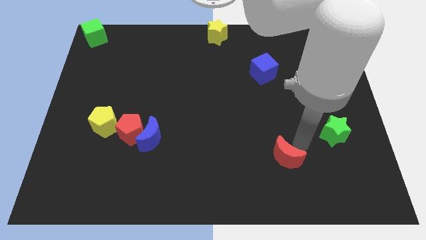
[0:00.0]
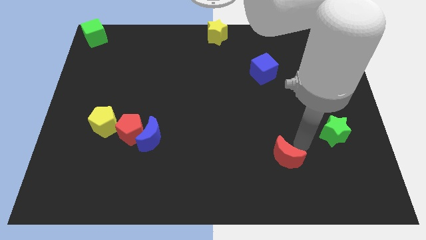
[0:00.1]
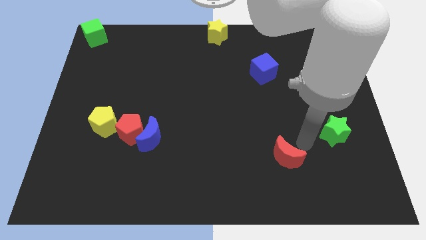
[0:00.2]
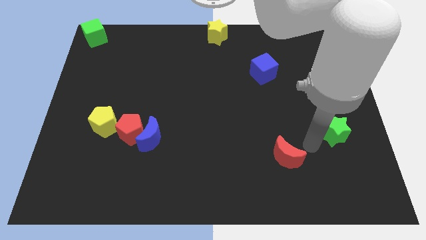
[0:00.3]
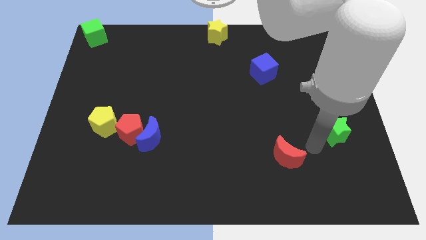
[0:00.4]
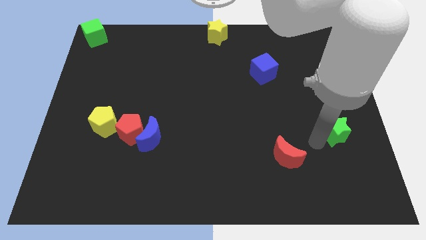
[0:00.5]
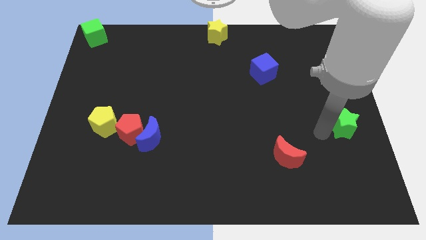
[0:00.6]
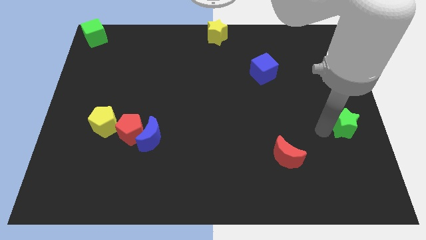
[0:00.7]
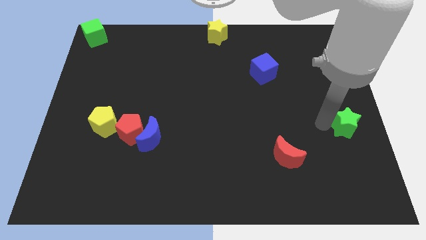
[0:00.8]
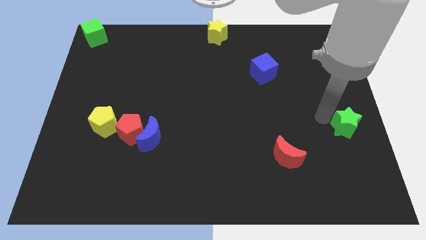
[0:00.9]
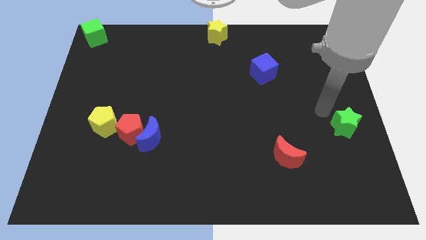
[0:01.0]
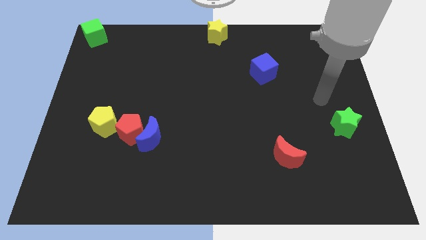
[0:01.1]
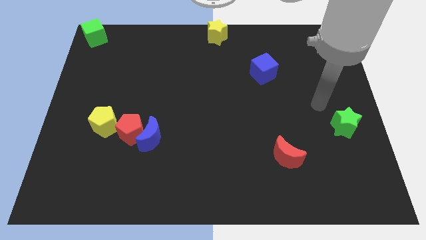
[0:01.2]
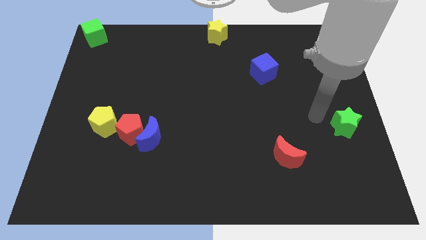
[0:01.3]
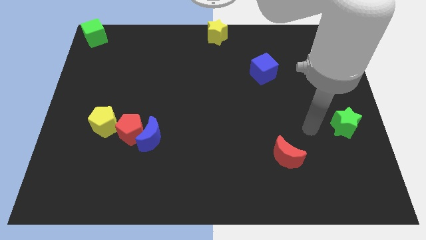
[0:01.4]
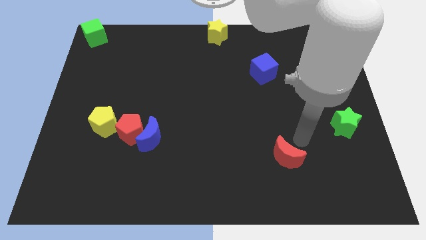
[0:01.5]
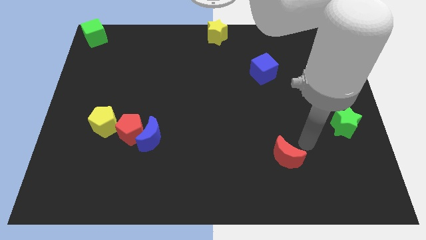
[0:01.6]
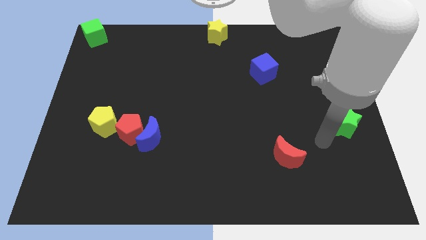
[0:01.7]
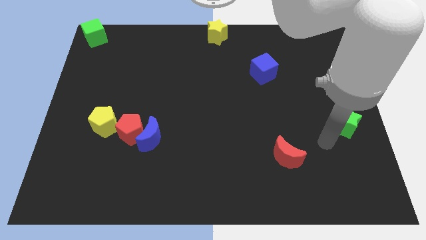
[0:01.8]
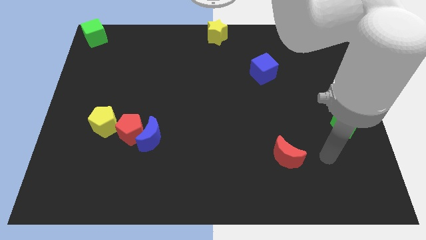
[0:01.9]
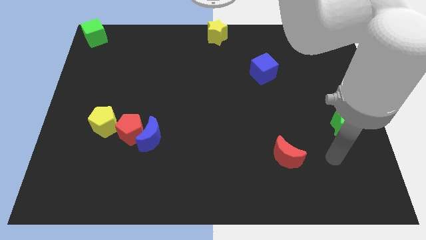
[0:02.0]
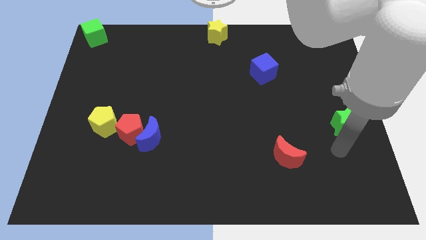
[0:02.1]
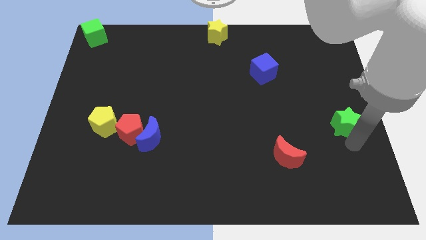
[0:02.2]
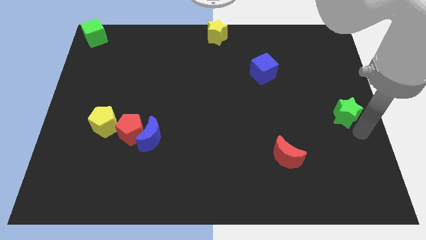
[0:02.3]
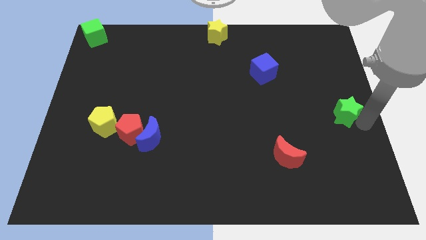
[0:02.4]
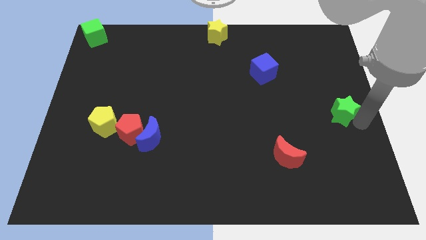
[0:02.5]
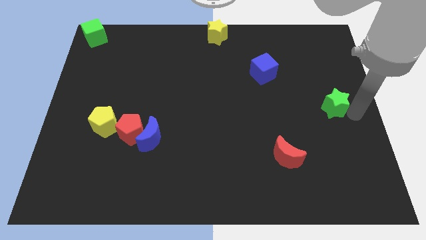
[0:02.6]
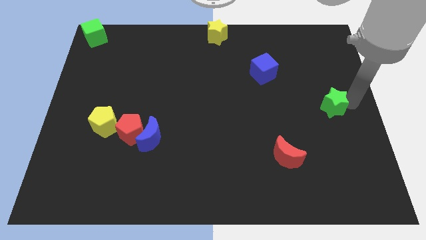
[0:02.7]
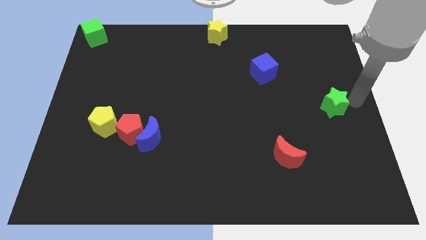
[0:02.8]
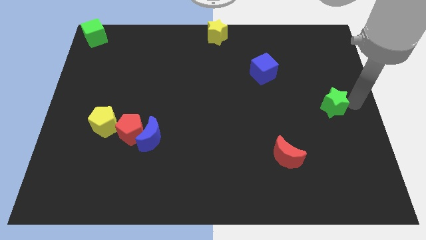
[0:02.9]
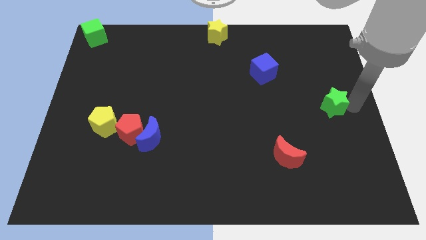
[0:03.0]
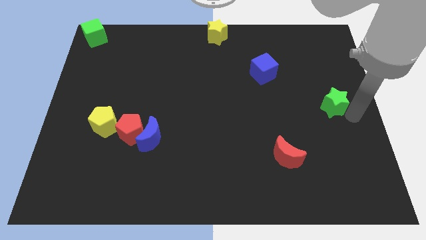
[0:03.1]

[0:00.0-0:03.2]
move the green star to the bottom right of the blue cube

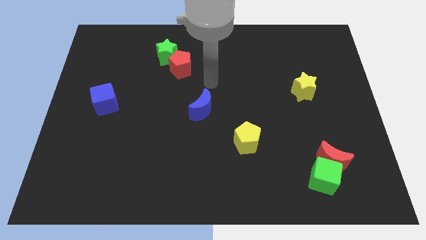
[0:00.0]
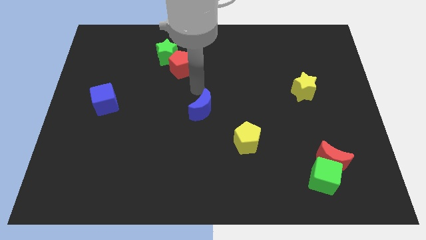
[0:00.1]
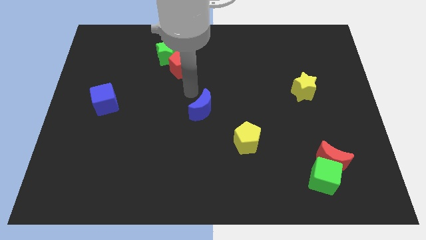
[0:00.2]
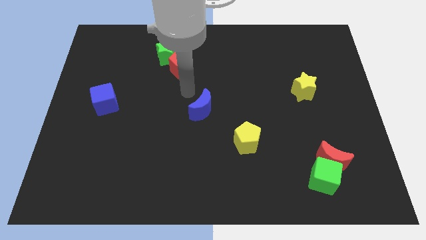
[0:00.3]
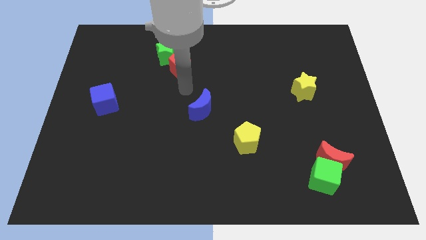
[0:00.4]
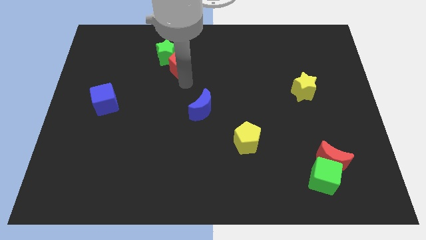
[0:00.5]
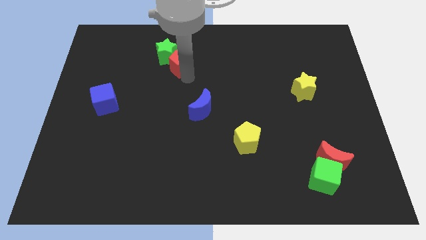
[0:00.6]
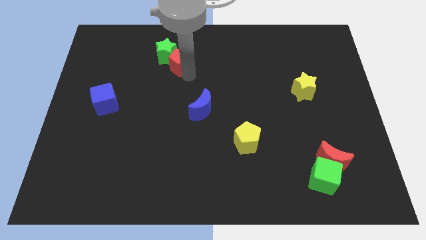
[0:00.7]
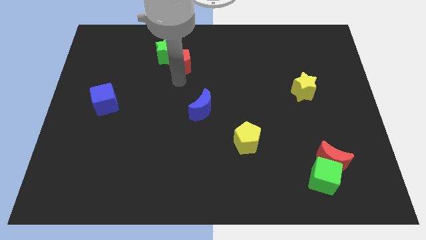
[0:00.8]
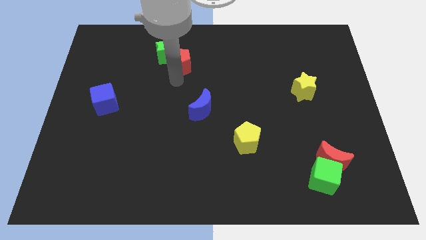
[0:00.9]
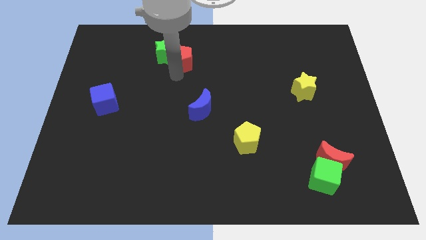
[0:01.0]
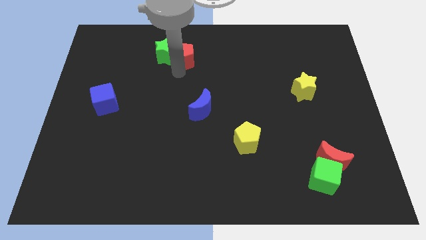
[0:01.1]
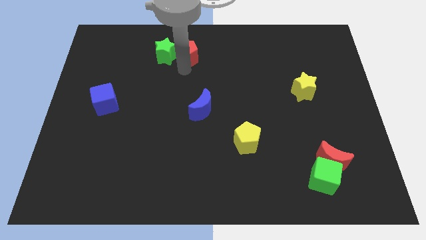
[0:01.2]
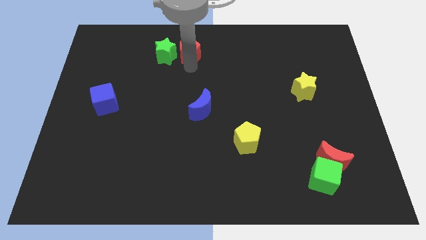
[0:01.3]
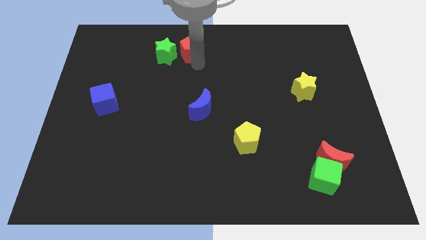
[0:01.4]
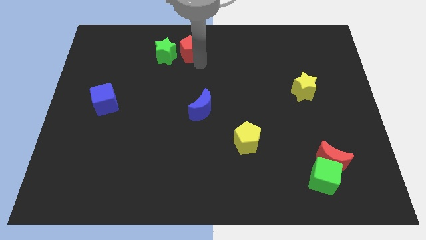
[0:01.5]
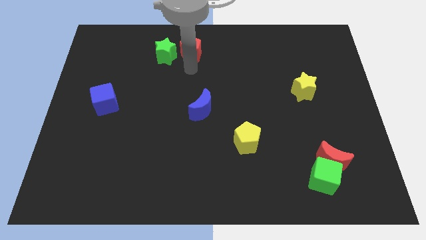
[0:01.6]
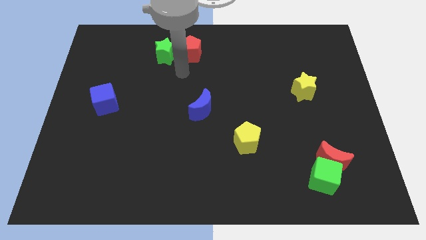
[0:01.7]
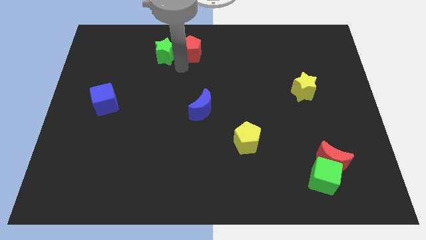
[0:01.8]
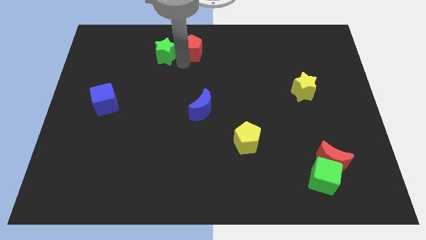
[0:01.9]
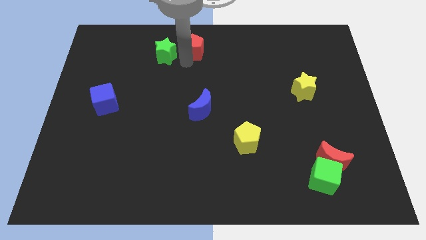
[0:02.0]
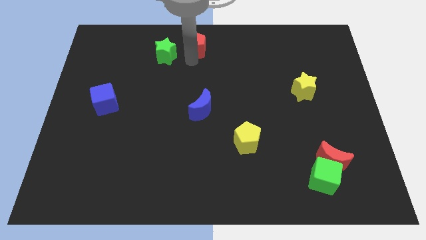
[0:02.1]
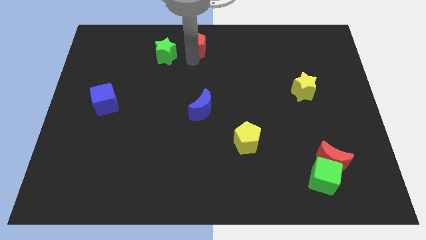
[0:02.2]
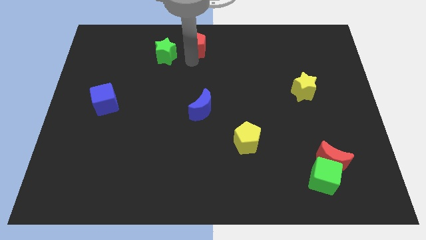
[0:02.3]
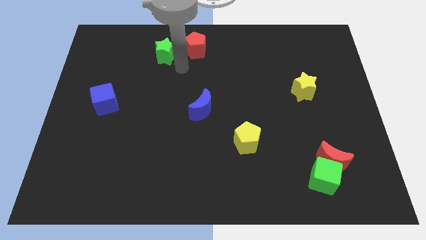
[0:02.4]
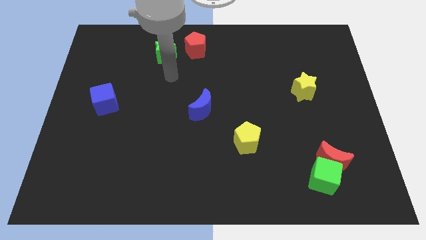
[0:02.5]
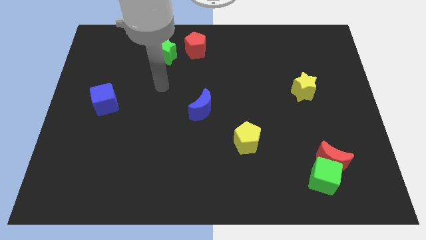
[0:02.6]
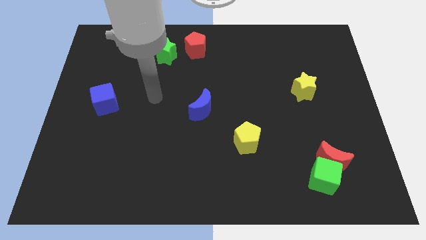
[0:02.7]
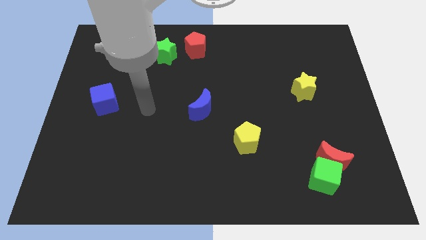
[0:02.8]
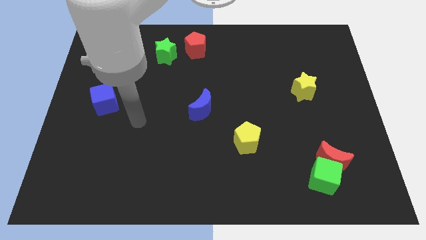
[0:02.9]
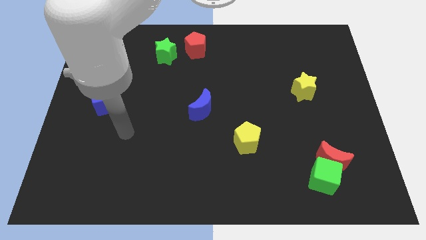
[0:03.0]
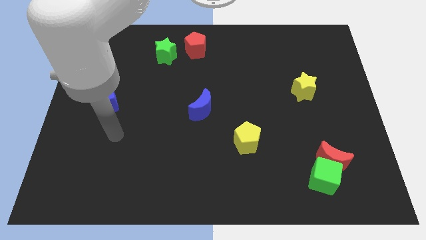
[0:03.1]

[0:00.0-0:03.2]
separate red pentagon from green star

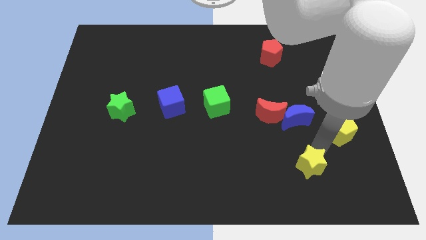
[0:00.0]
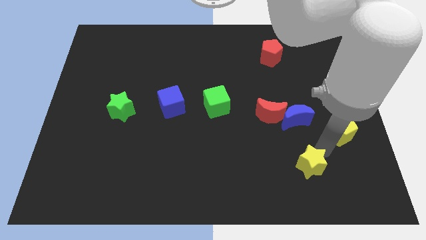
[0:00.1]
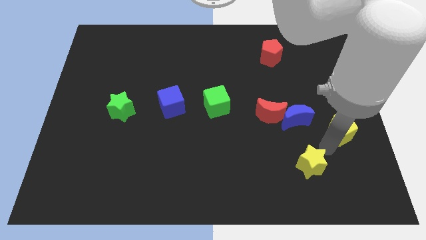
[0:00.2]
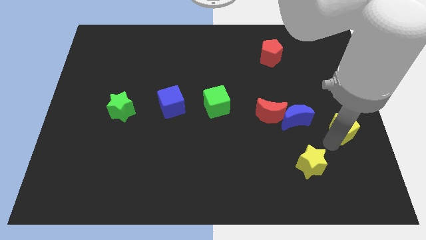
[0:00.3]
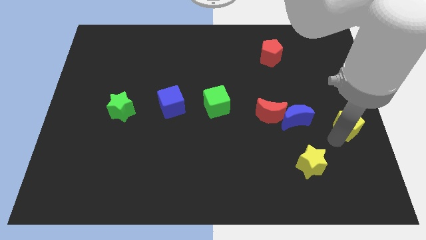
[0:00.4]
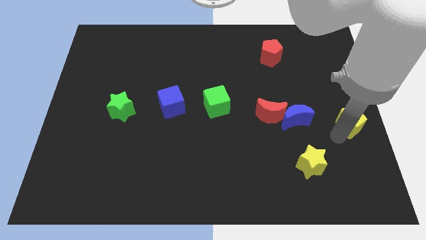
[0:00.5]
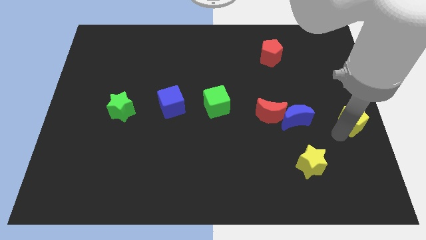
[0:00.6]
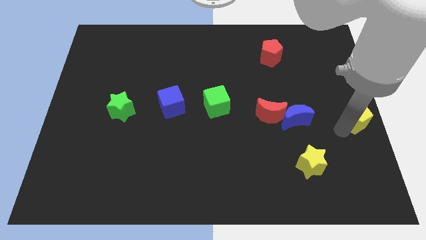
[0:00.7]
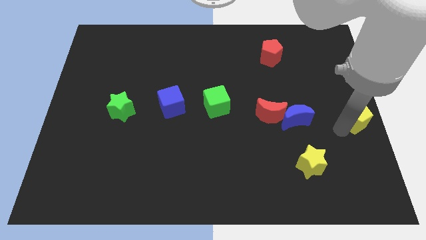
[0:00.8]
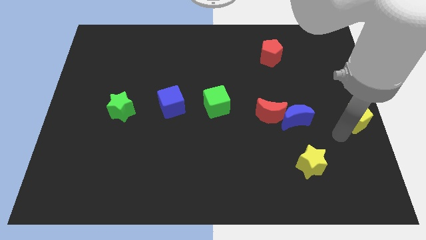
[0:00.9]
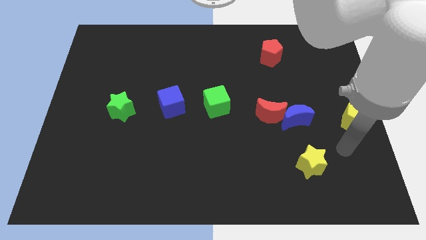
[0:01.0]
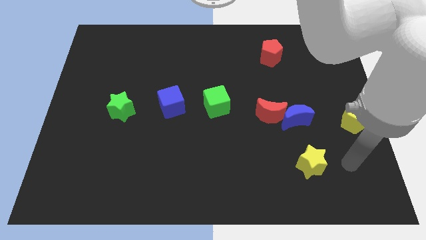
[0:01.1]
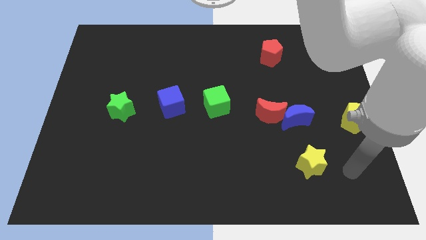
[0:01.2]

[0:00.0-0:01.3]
move the yellow pentagon to the blue moon

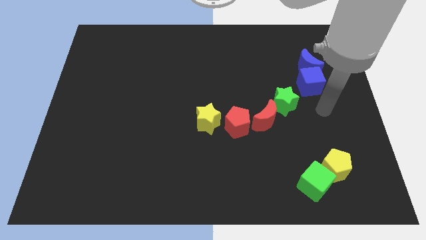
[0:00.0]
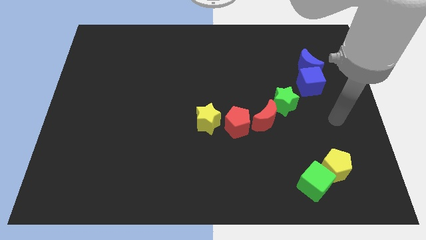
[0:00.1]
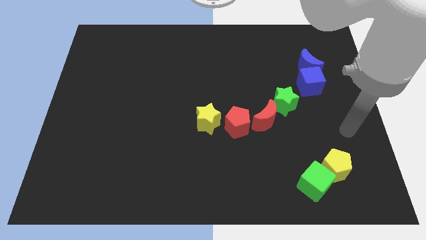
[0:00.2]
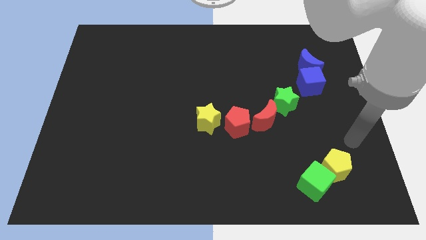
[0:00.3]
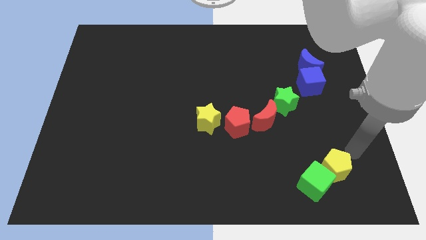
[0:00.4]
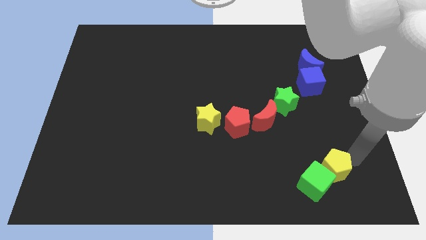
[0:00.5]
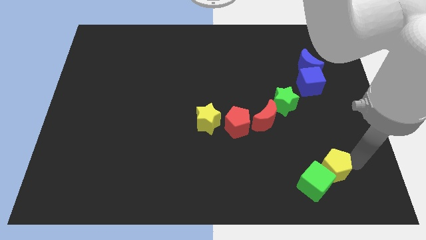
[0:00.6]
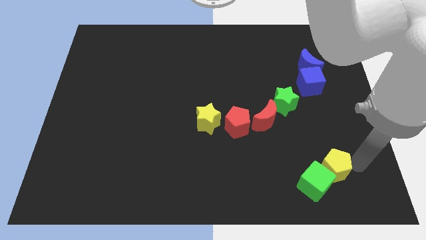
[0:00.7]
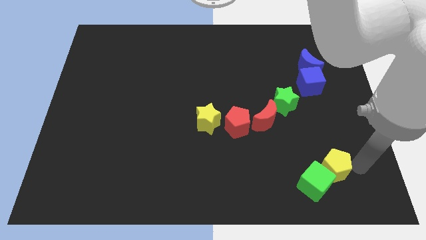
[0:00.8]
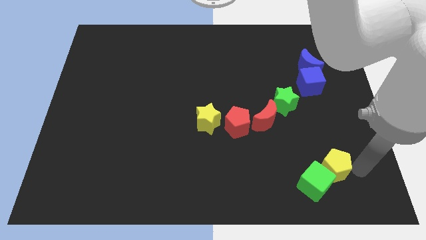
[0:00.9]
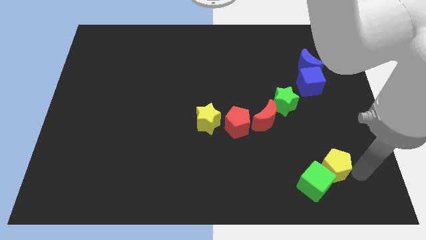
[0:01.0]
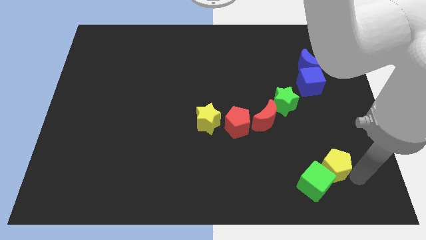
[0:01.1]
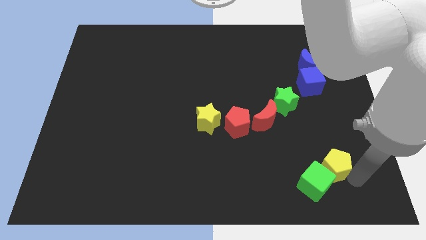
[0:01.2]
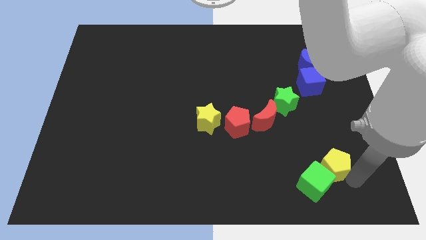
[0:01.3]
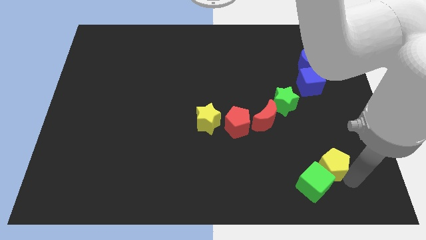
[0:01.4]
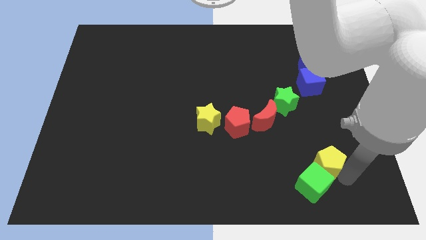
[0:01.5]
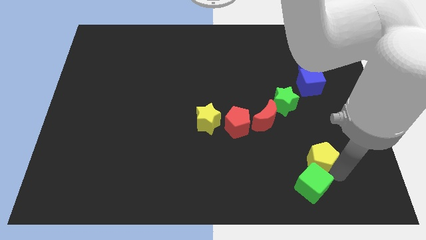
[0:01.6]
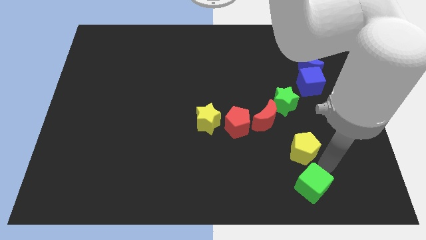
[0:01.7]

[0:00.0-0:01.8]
put the pentagon above the green cube
